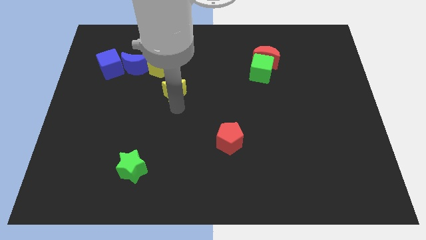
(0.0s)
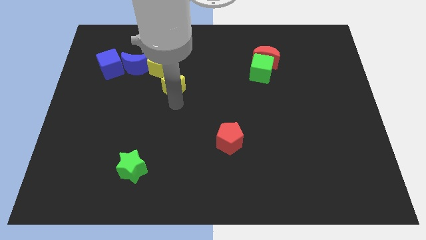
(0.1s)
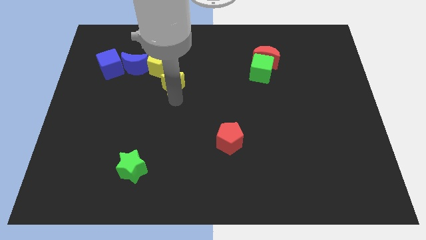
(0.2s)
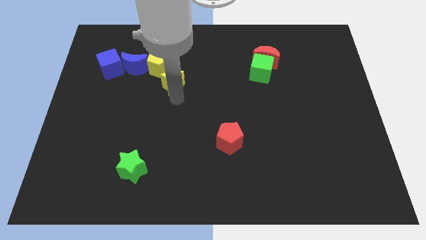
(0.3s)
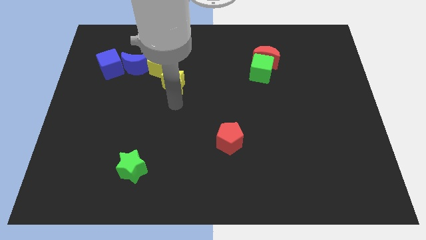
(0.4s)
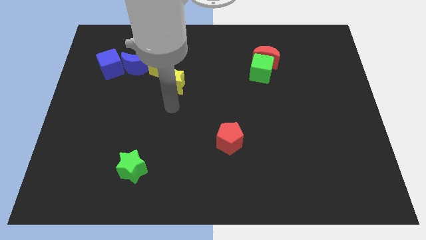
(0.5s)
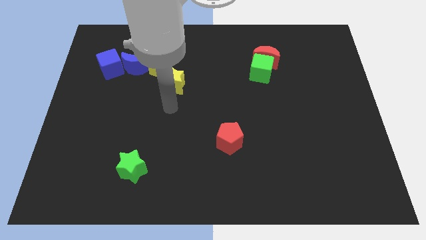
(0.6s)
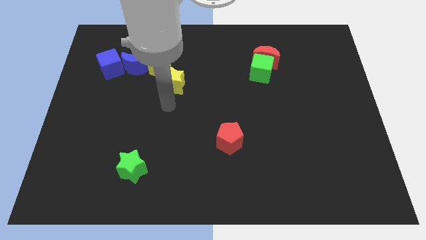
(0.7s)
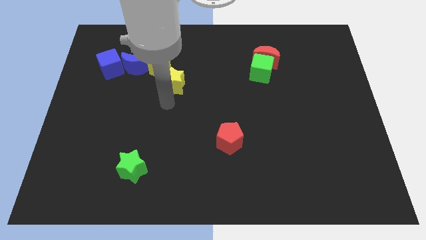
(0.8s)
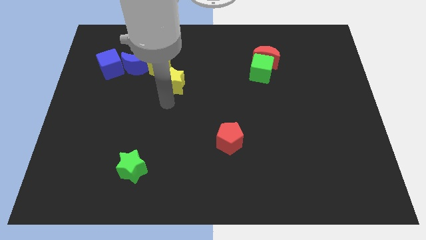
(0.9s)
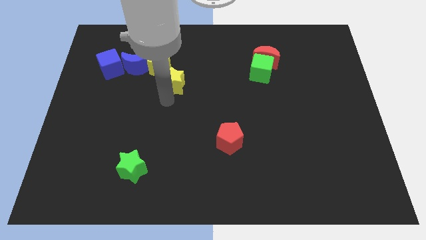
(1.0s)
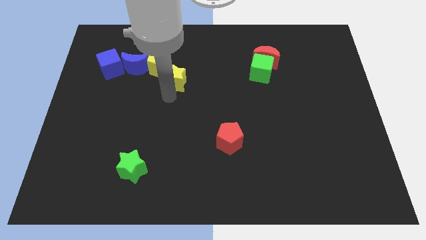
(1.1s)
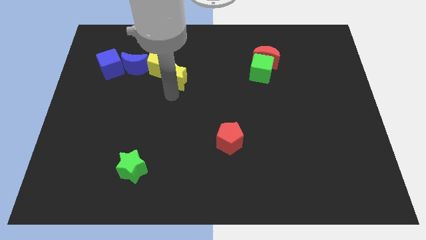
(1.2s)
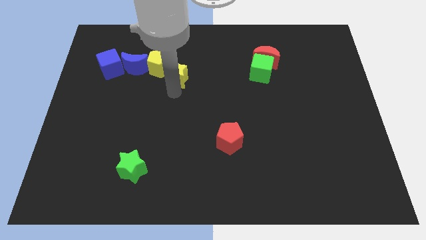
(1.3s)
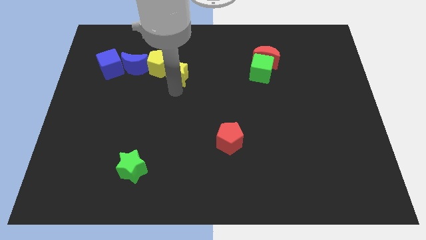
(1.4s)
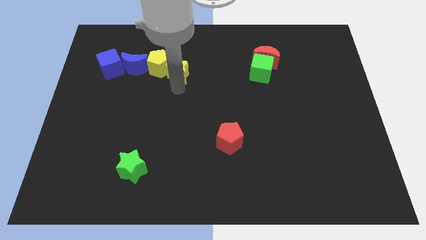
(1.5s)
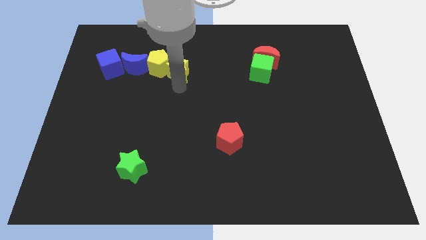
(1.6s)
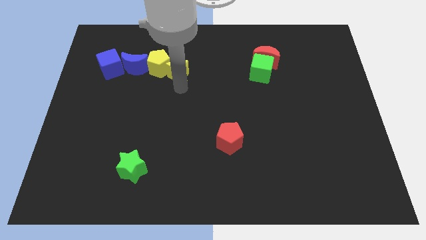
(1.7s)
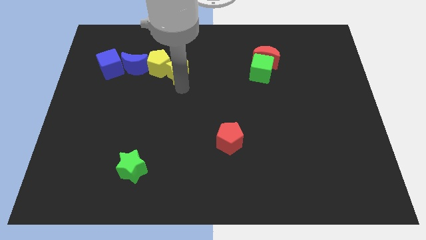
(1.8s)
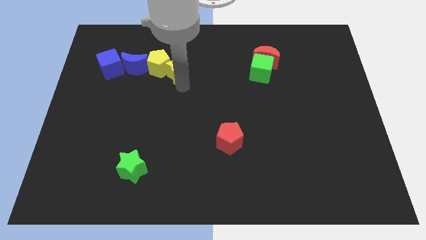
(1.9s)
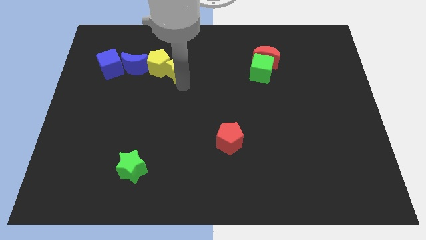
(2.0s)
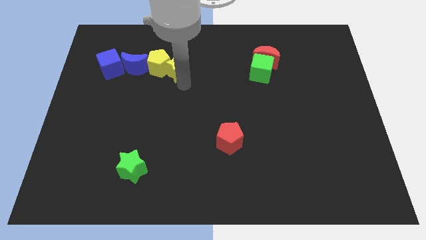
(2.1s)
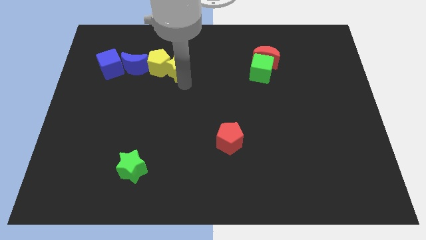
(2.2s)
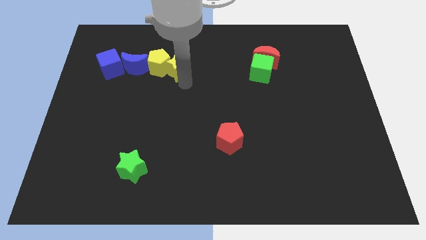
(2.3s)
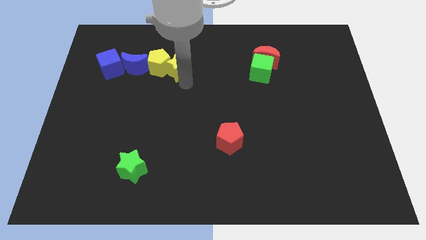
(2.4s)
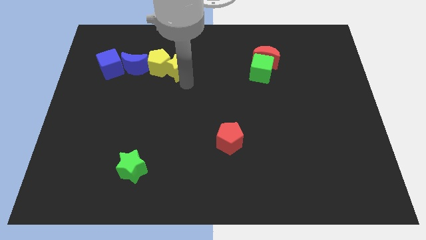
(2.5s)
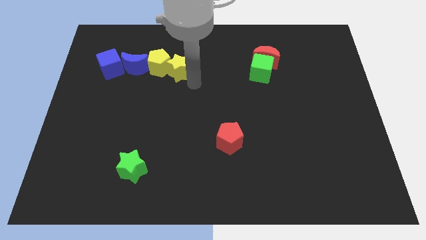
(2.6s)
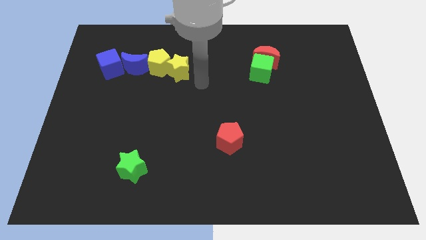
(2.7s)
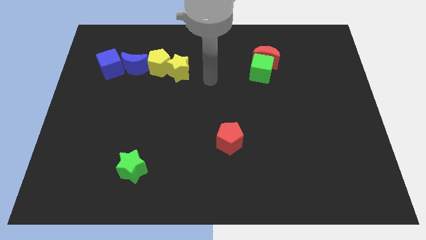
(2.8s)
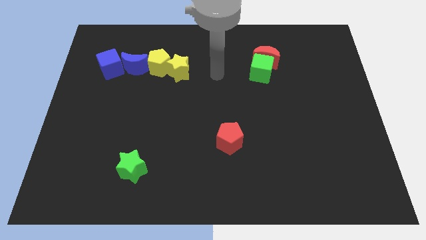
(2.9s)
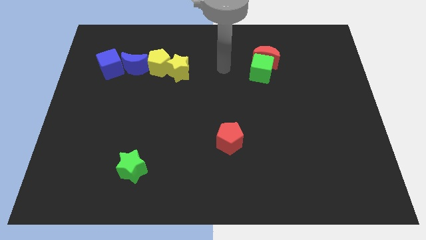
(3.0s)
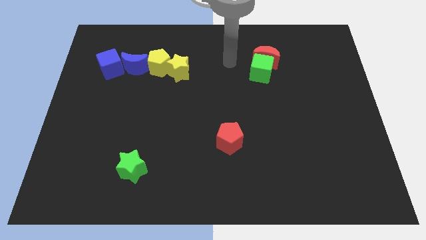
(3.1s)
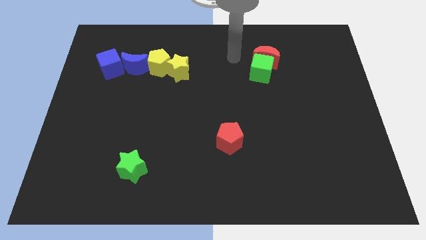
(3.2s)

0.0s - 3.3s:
slide the yellow star to the bottom right side of the yellow pentagon

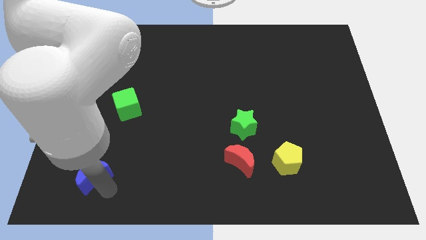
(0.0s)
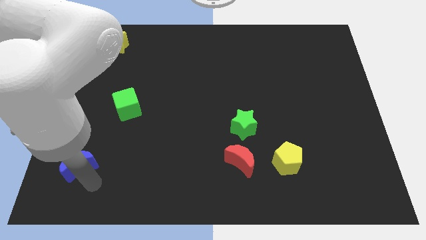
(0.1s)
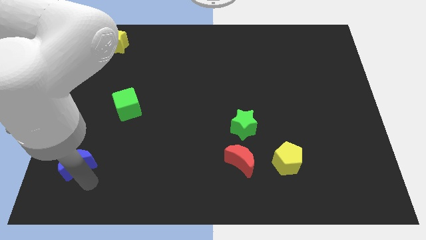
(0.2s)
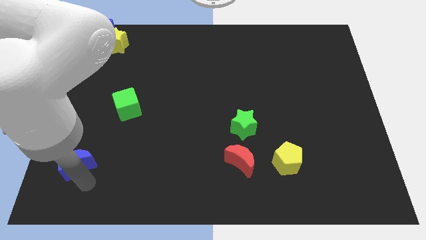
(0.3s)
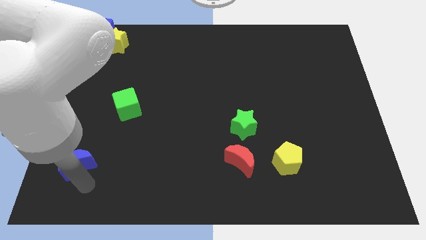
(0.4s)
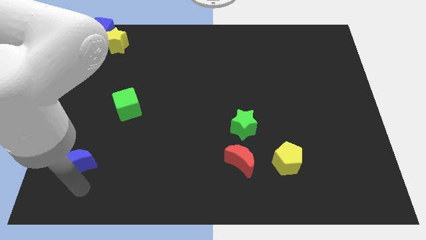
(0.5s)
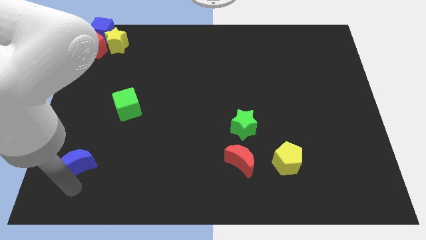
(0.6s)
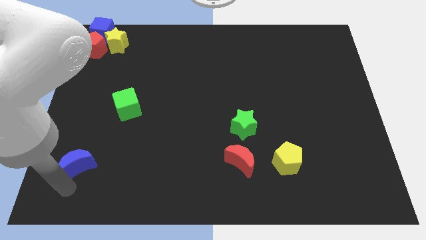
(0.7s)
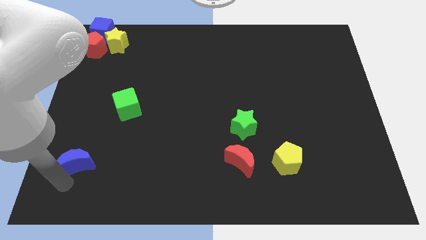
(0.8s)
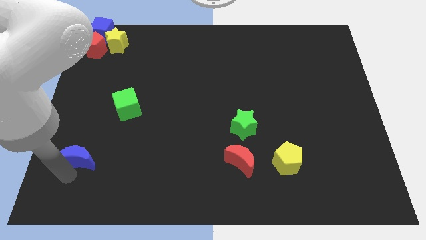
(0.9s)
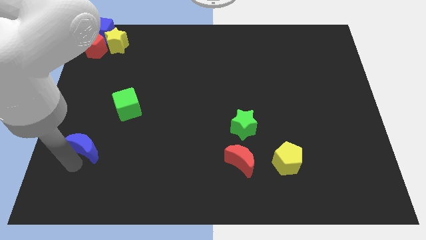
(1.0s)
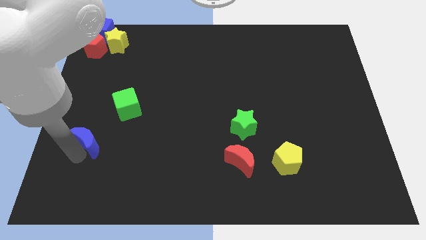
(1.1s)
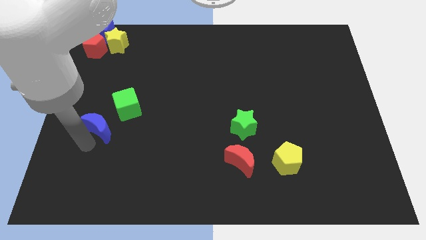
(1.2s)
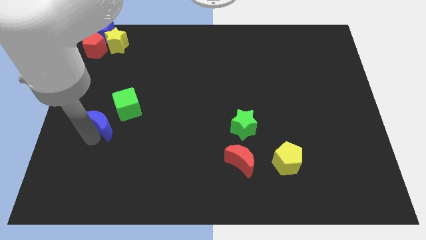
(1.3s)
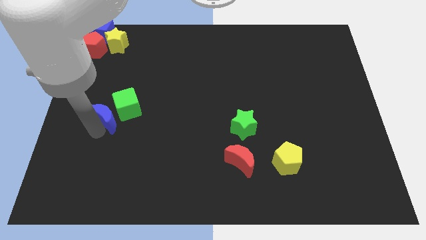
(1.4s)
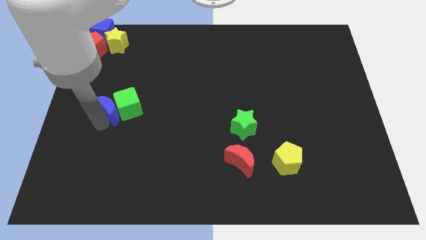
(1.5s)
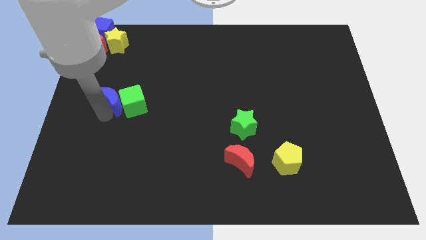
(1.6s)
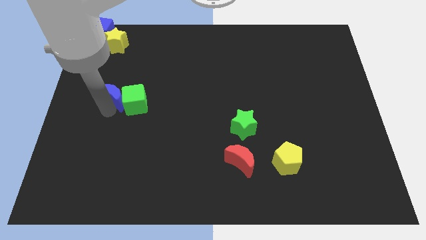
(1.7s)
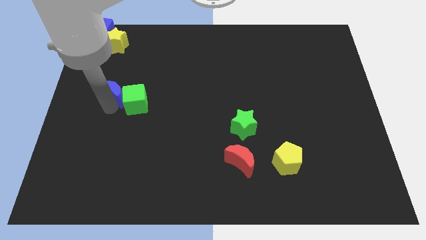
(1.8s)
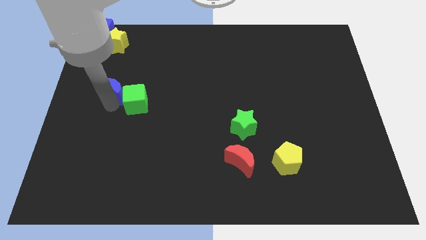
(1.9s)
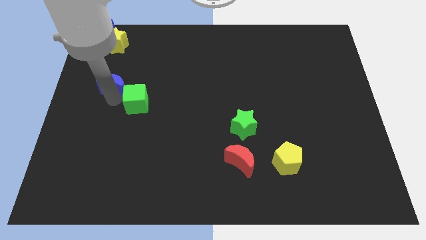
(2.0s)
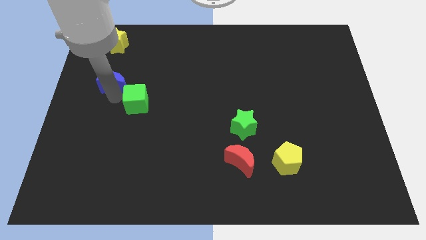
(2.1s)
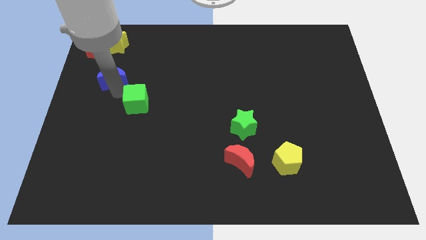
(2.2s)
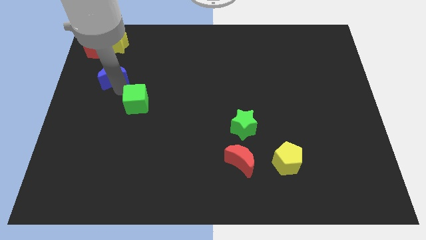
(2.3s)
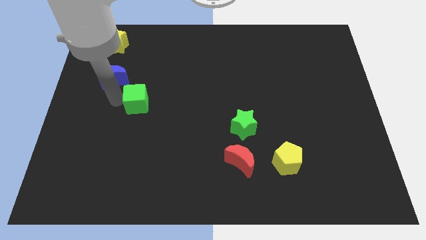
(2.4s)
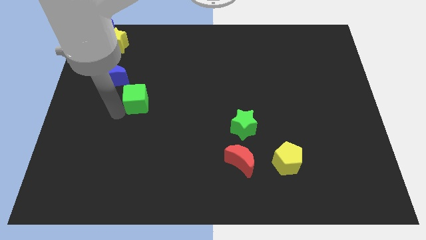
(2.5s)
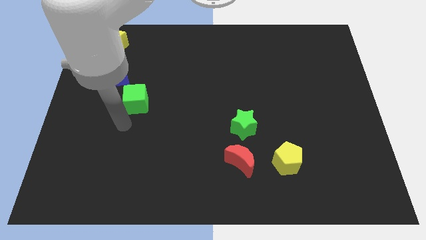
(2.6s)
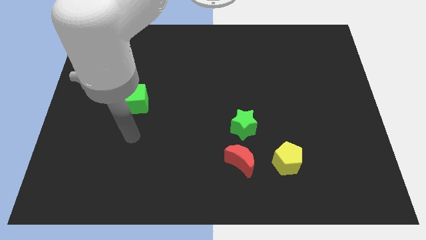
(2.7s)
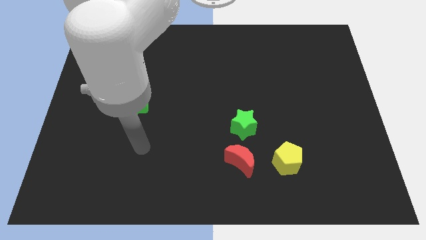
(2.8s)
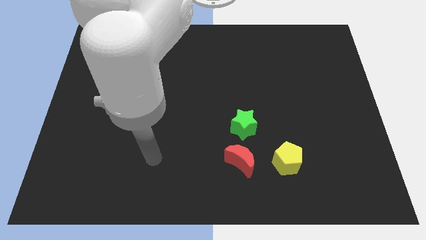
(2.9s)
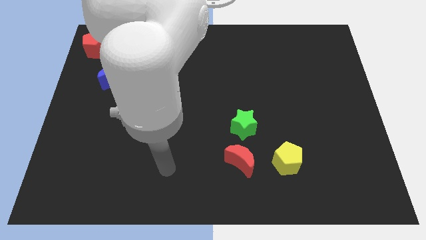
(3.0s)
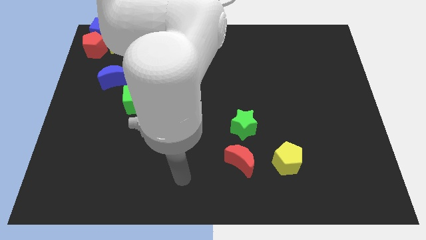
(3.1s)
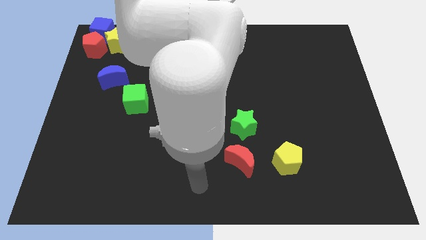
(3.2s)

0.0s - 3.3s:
place the blue moon diagonally at the top left side of the green cube

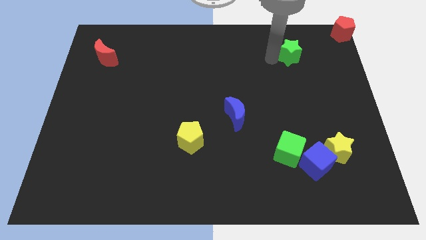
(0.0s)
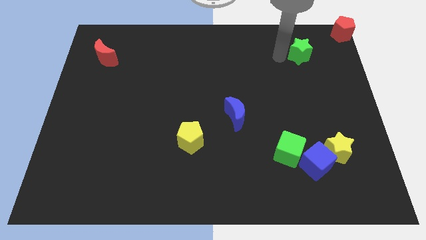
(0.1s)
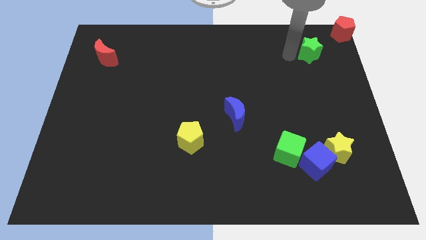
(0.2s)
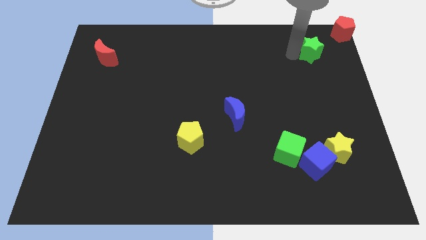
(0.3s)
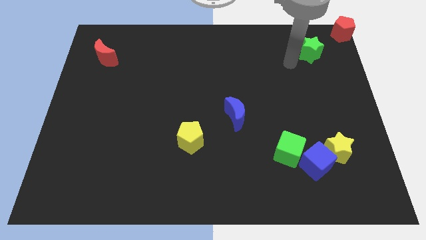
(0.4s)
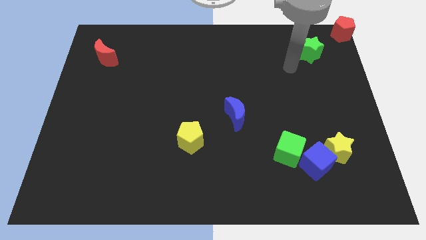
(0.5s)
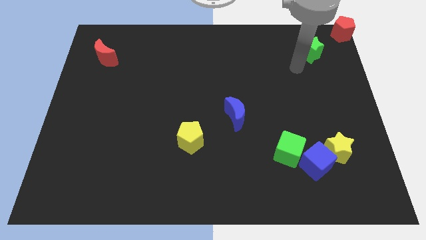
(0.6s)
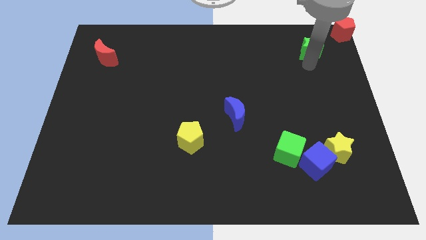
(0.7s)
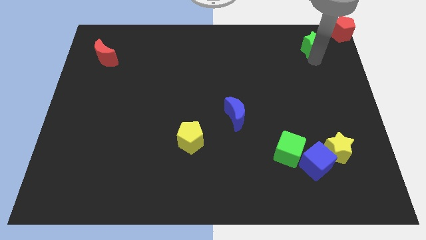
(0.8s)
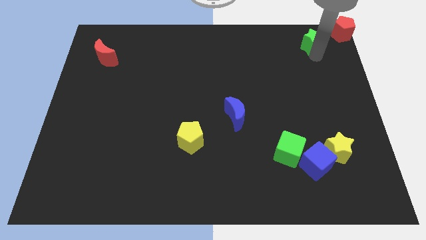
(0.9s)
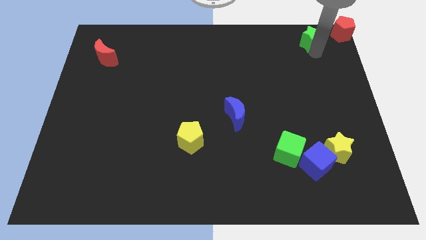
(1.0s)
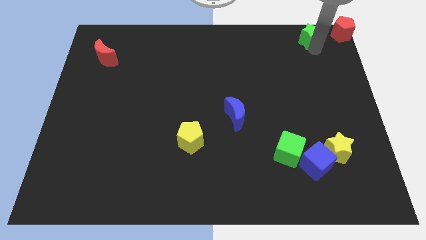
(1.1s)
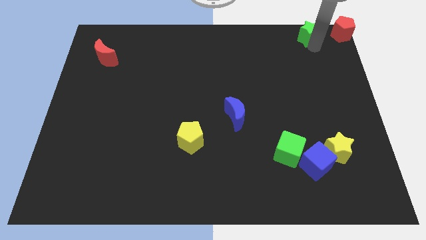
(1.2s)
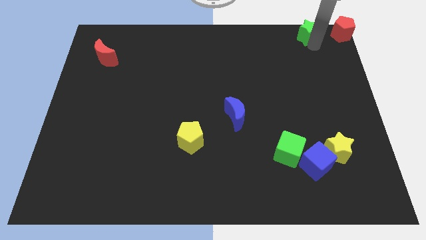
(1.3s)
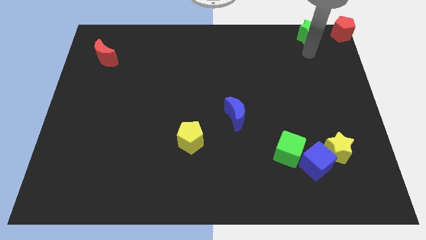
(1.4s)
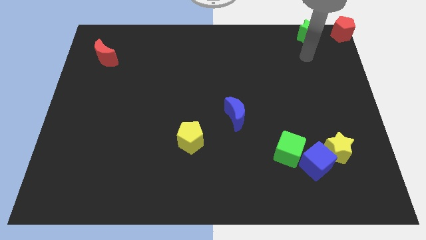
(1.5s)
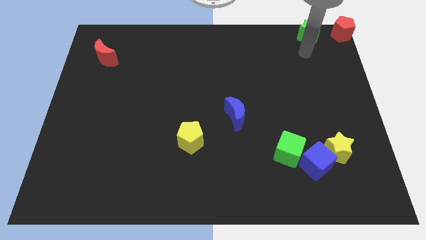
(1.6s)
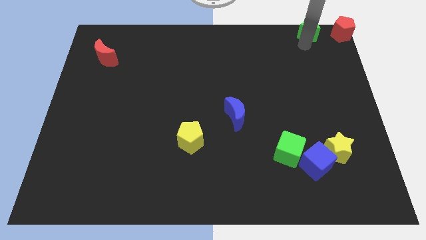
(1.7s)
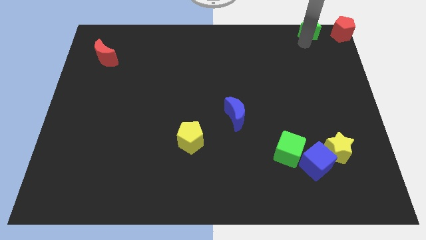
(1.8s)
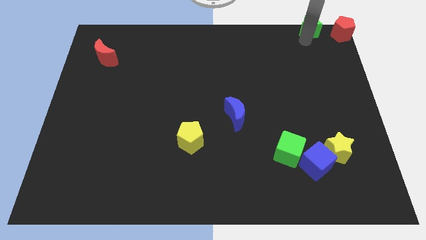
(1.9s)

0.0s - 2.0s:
push green star to top right corner

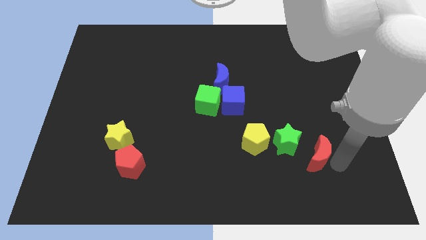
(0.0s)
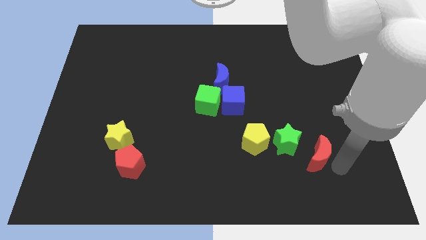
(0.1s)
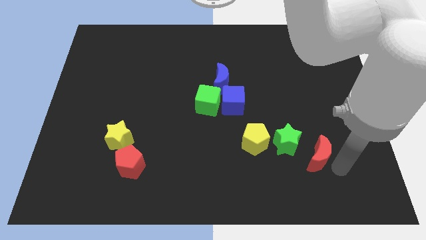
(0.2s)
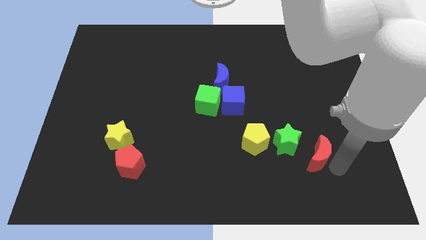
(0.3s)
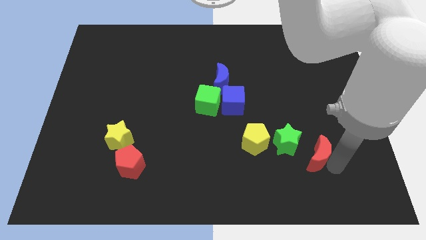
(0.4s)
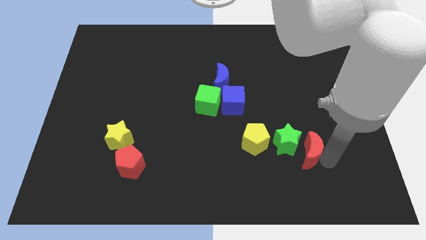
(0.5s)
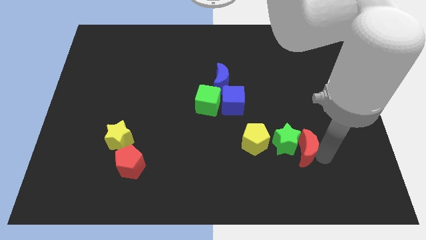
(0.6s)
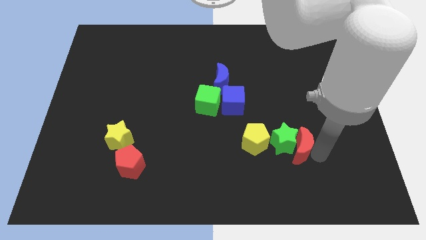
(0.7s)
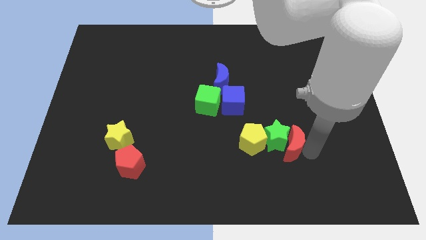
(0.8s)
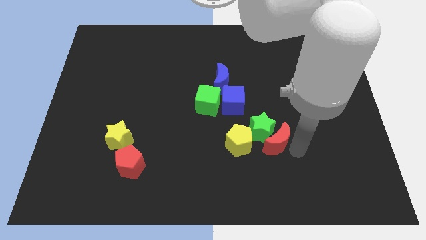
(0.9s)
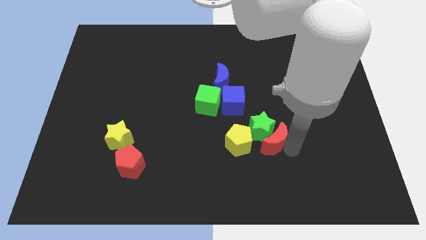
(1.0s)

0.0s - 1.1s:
slide red moon into green star
